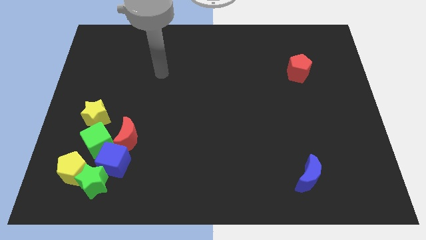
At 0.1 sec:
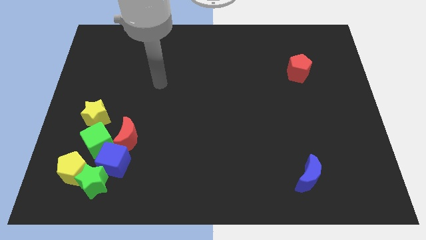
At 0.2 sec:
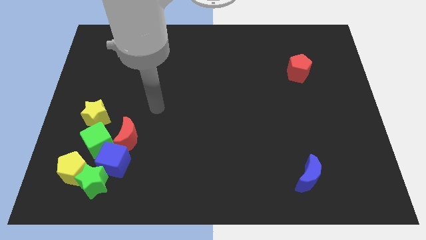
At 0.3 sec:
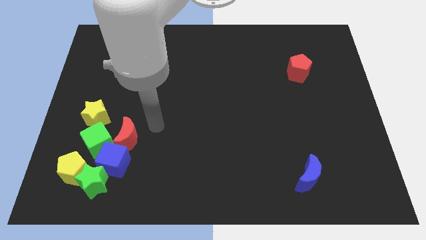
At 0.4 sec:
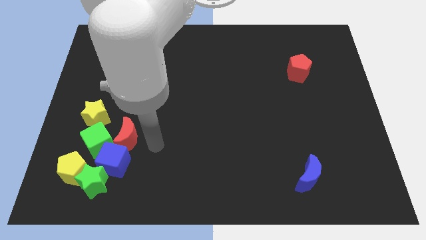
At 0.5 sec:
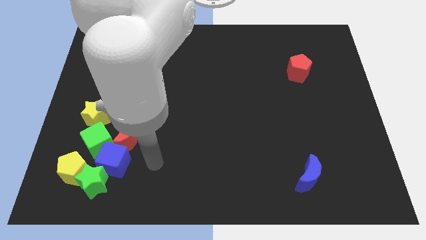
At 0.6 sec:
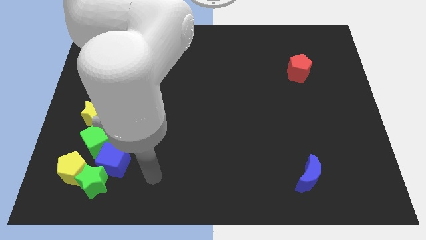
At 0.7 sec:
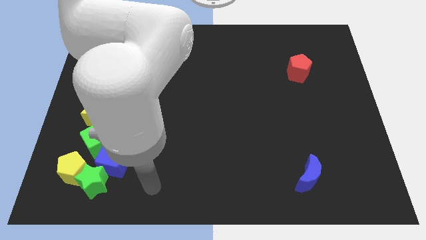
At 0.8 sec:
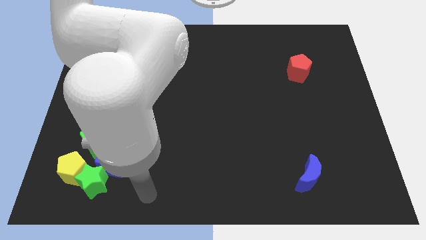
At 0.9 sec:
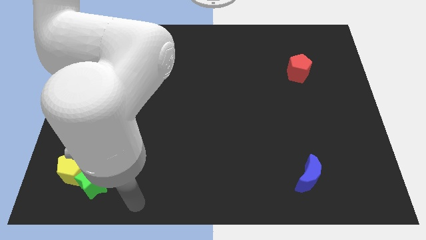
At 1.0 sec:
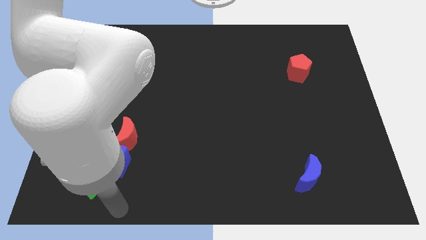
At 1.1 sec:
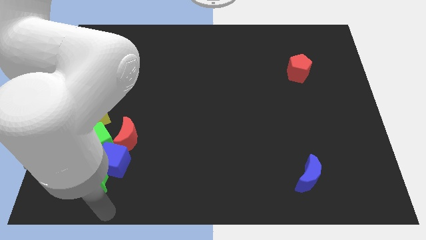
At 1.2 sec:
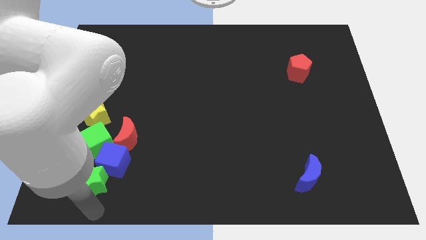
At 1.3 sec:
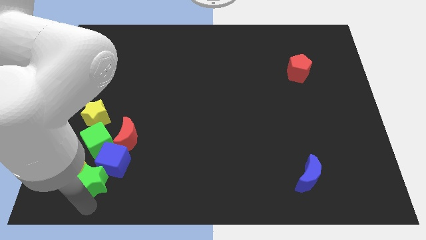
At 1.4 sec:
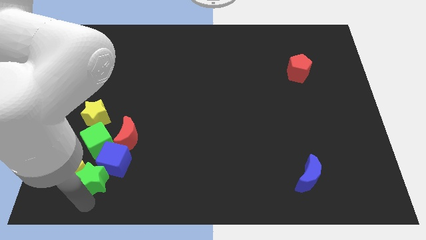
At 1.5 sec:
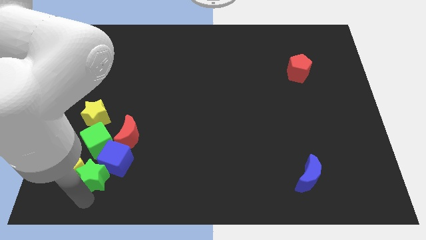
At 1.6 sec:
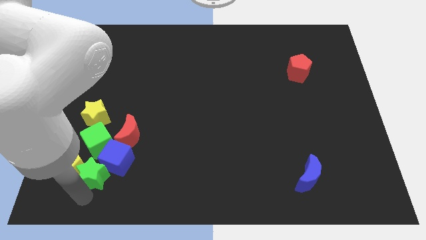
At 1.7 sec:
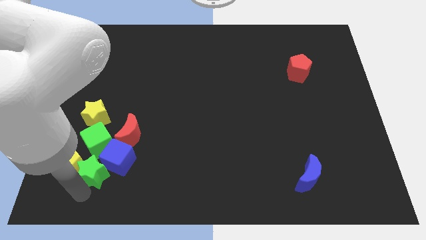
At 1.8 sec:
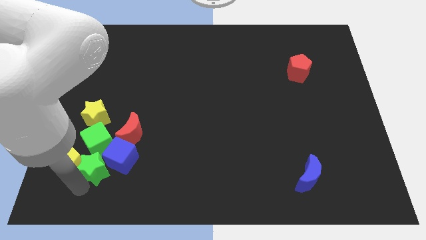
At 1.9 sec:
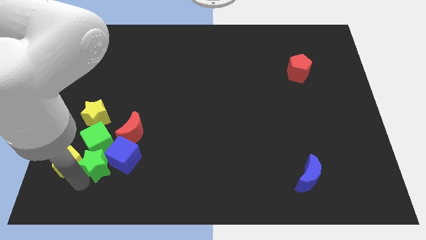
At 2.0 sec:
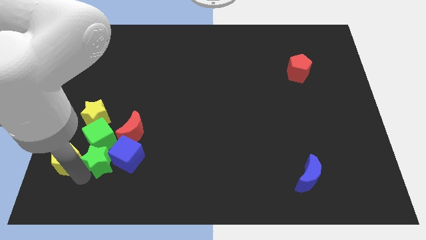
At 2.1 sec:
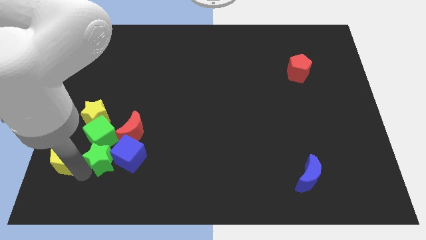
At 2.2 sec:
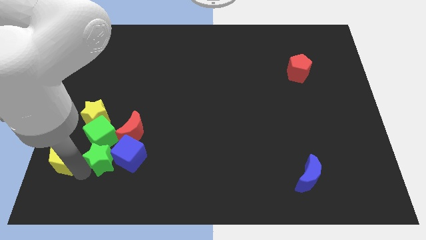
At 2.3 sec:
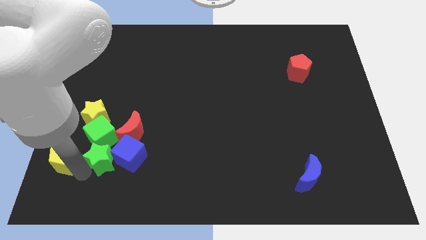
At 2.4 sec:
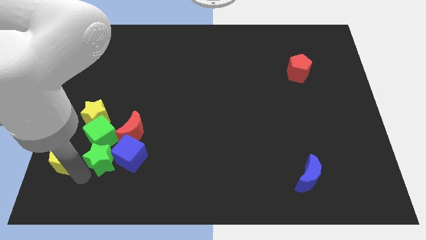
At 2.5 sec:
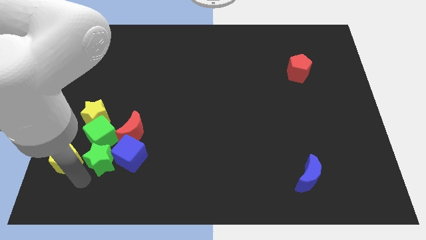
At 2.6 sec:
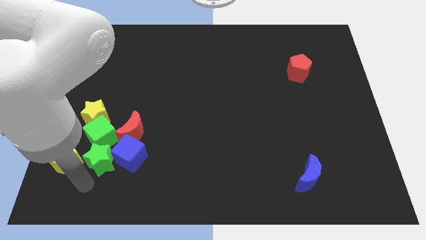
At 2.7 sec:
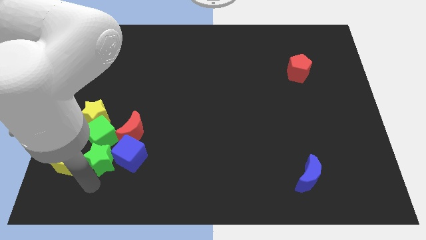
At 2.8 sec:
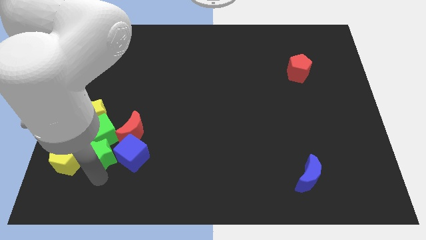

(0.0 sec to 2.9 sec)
push the green star towards the green cube

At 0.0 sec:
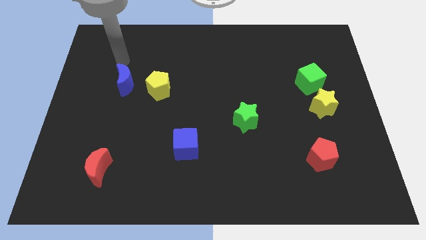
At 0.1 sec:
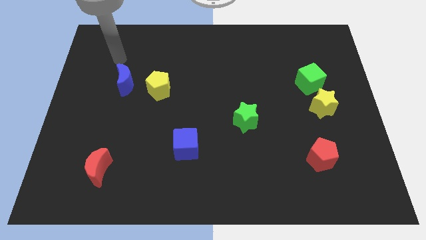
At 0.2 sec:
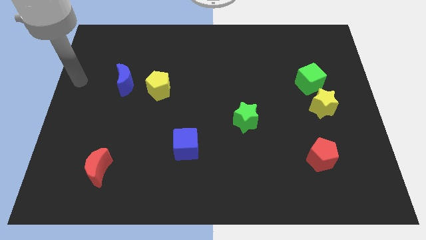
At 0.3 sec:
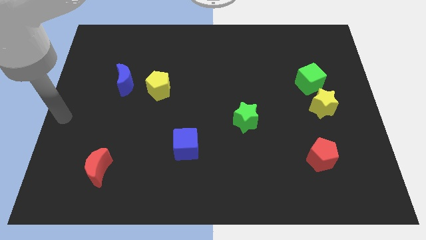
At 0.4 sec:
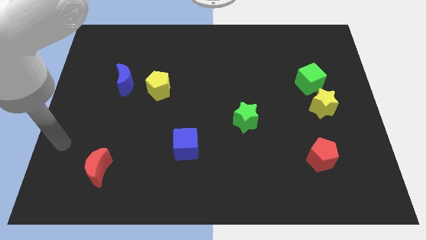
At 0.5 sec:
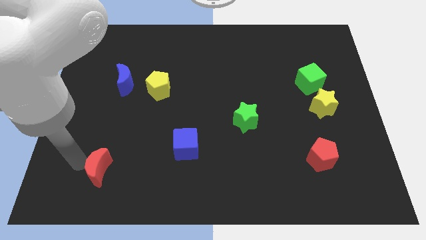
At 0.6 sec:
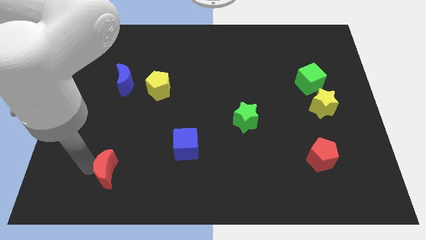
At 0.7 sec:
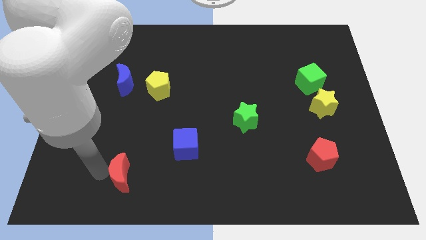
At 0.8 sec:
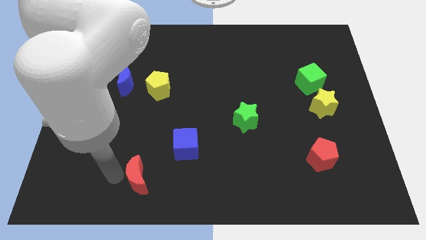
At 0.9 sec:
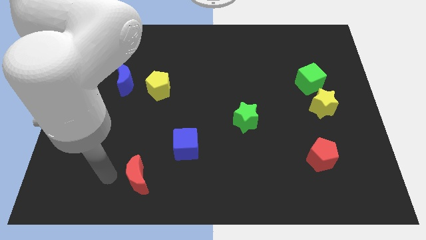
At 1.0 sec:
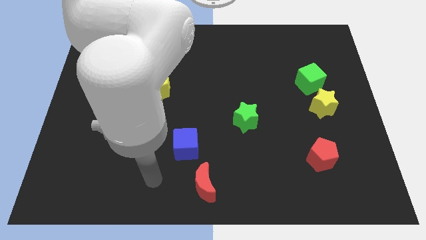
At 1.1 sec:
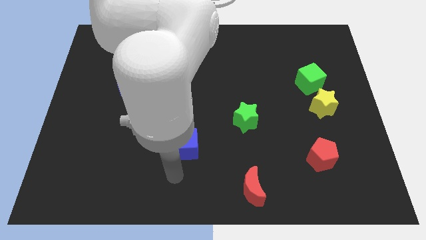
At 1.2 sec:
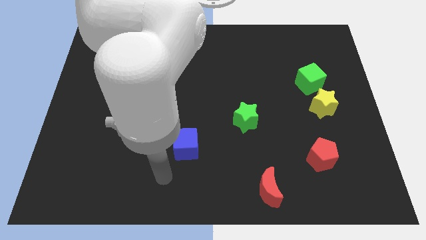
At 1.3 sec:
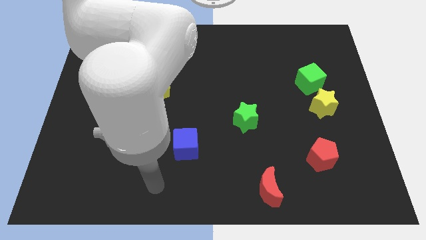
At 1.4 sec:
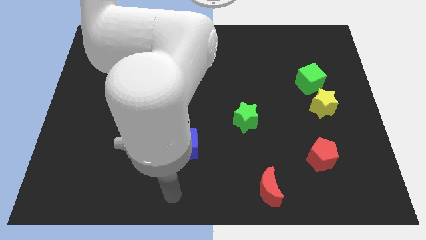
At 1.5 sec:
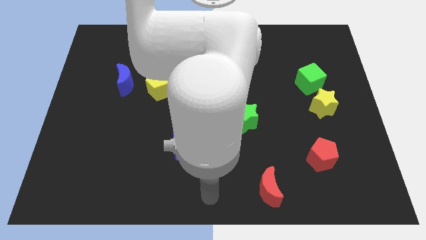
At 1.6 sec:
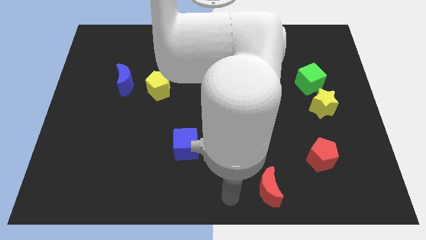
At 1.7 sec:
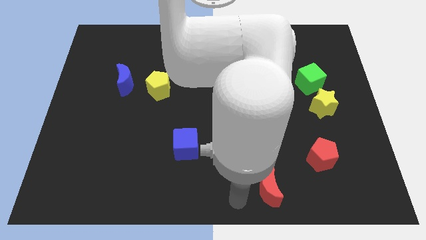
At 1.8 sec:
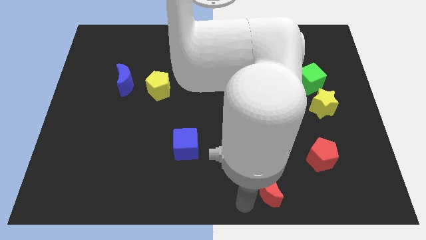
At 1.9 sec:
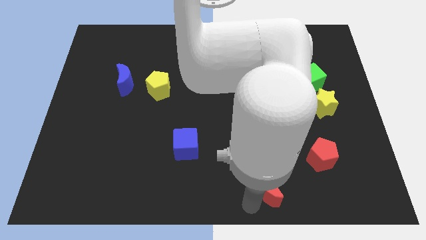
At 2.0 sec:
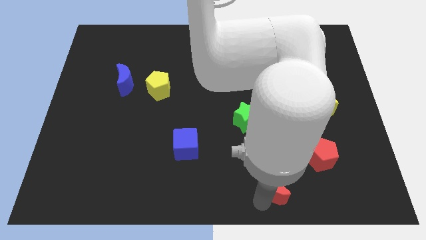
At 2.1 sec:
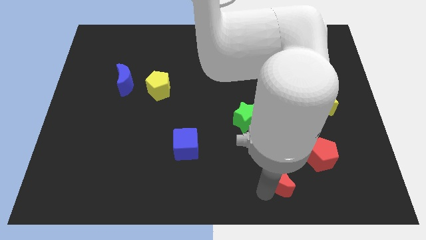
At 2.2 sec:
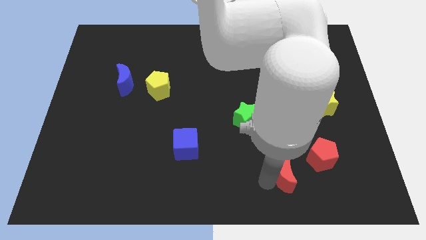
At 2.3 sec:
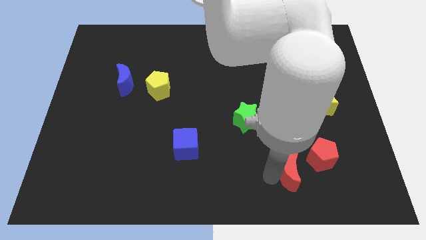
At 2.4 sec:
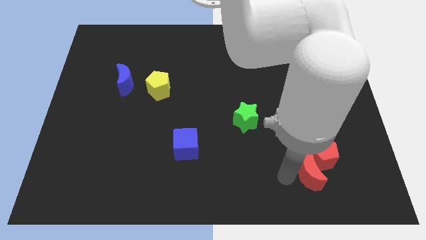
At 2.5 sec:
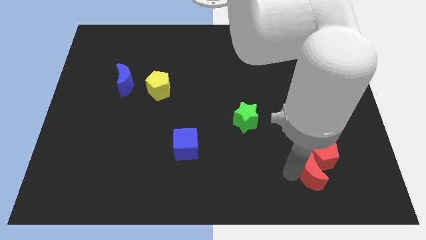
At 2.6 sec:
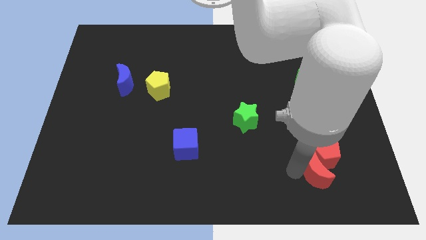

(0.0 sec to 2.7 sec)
move the red moon close to the red pentagon

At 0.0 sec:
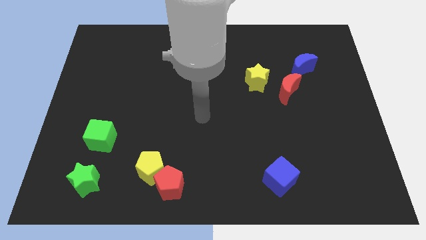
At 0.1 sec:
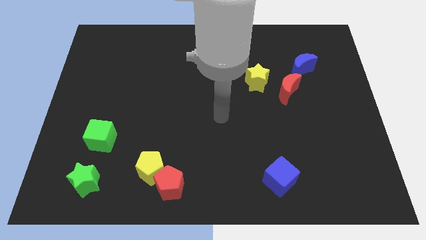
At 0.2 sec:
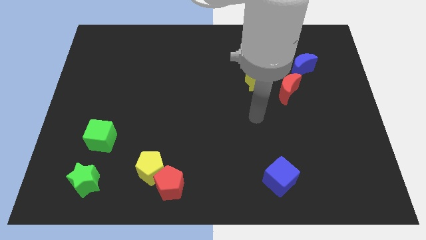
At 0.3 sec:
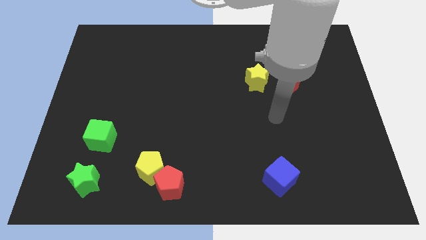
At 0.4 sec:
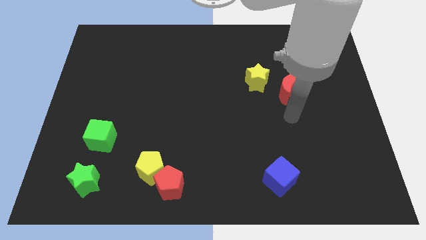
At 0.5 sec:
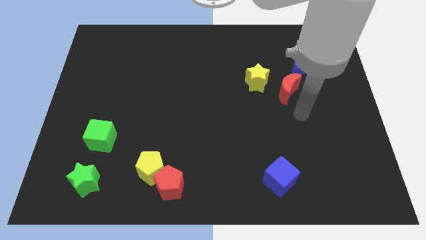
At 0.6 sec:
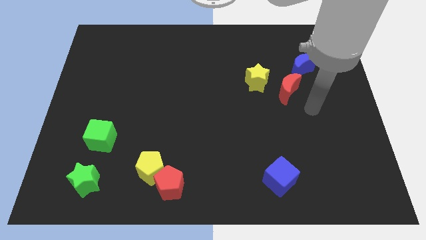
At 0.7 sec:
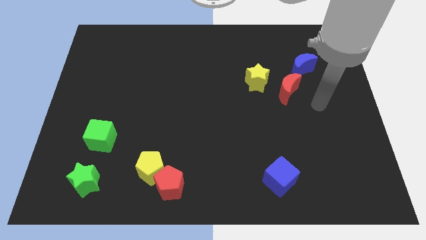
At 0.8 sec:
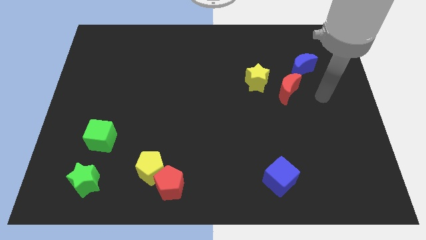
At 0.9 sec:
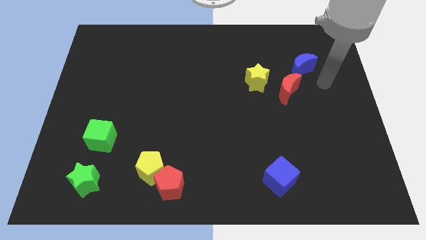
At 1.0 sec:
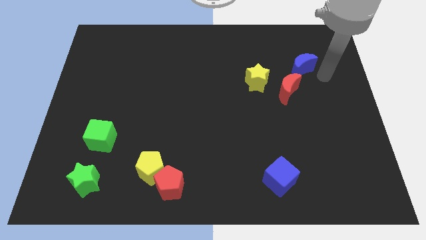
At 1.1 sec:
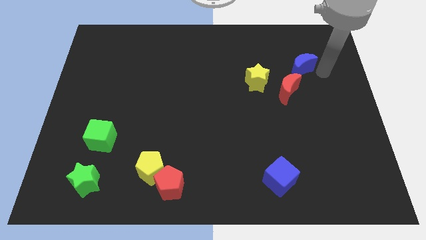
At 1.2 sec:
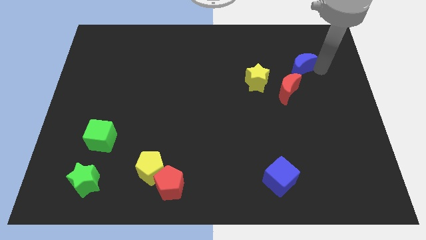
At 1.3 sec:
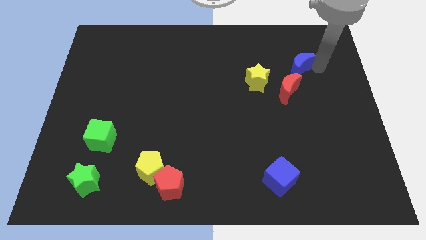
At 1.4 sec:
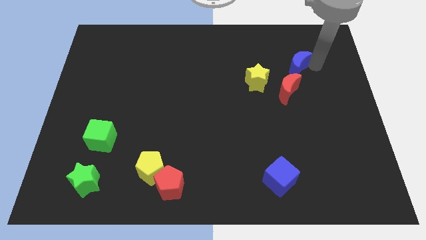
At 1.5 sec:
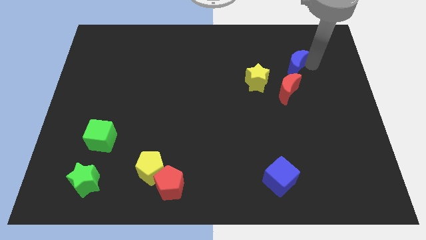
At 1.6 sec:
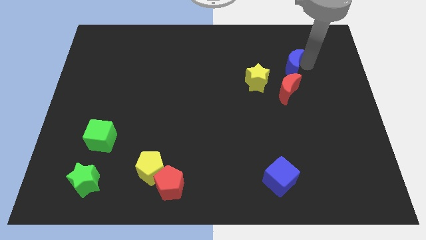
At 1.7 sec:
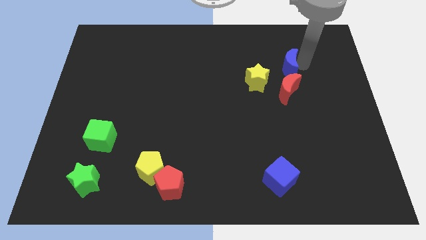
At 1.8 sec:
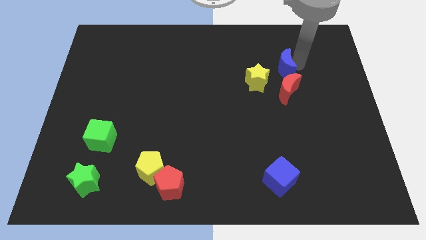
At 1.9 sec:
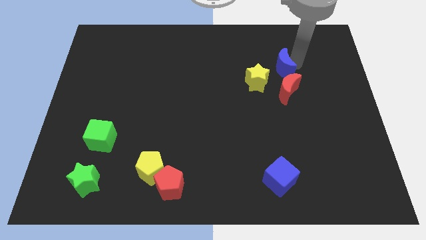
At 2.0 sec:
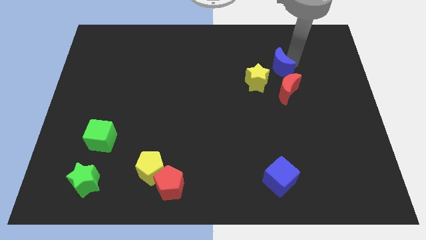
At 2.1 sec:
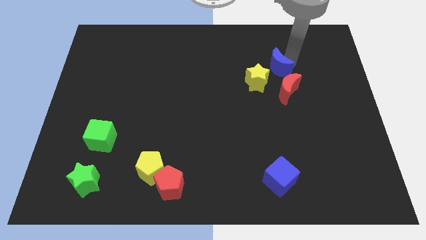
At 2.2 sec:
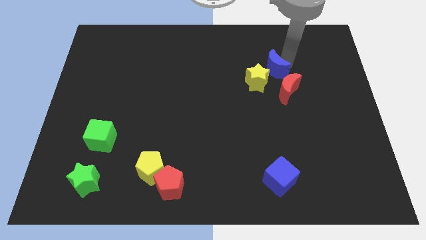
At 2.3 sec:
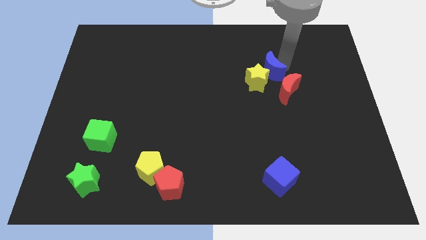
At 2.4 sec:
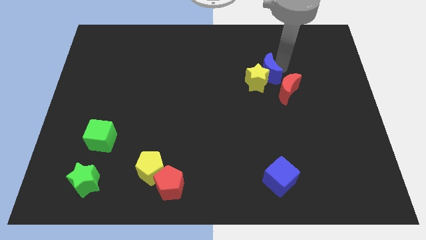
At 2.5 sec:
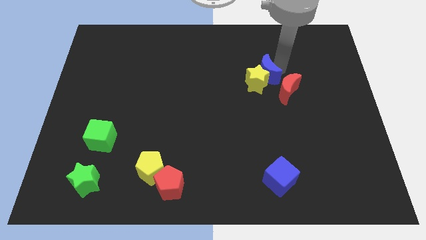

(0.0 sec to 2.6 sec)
put the blue moon to the yellow star

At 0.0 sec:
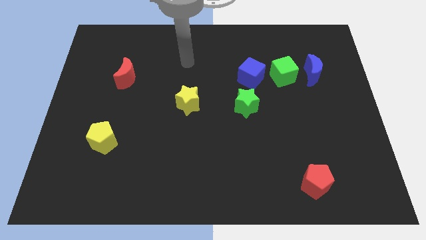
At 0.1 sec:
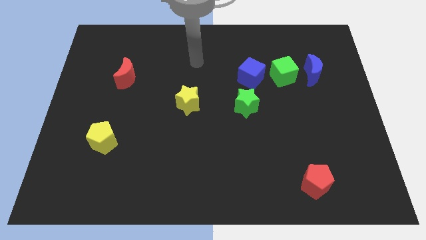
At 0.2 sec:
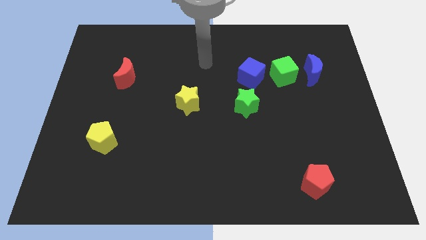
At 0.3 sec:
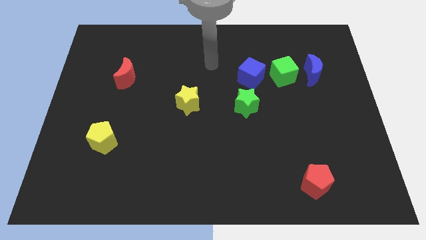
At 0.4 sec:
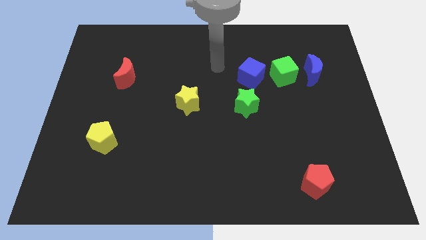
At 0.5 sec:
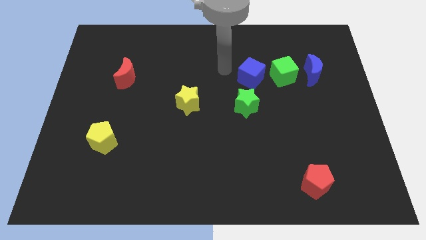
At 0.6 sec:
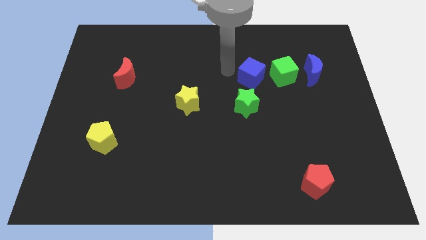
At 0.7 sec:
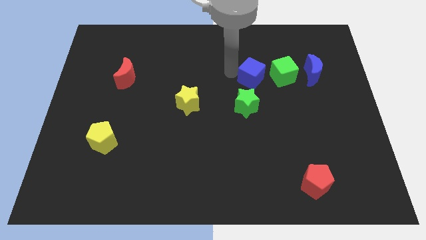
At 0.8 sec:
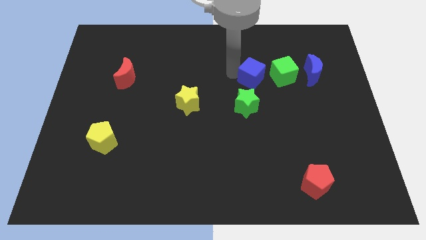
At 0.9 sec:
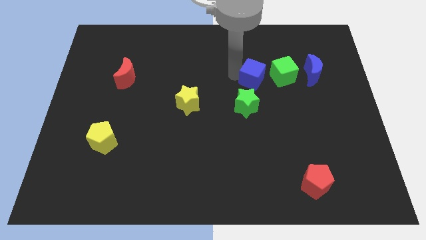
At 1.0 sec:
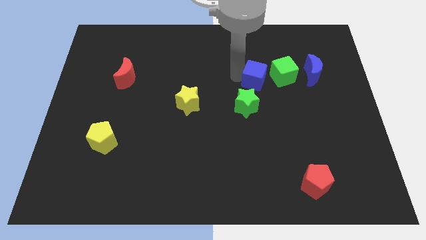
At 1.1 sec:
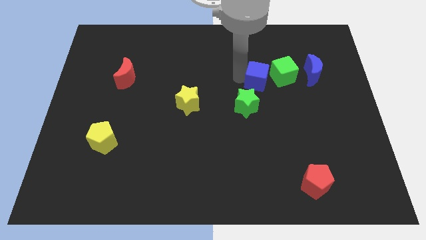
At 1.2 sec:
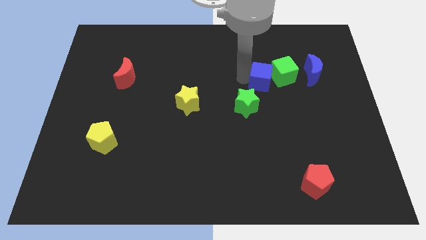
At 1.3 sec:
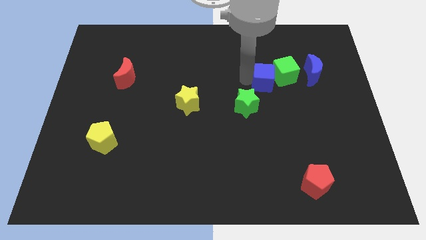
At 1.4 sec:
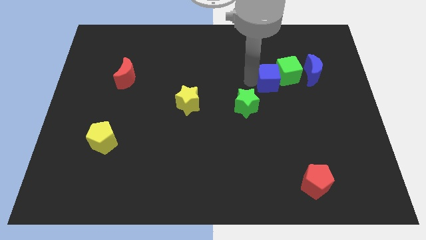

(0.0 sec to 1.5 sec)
move the blue cube close to the green cube
